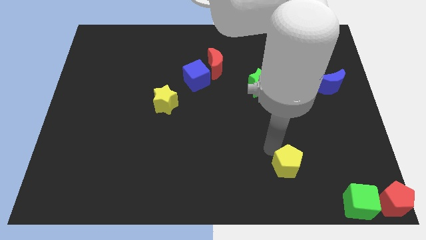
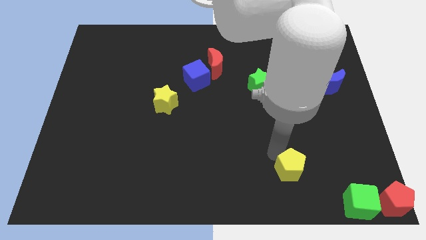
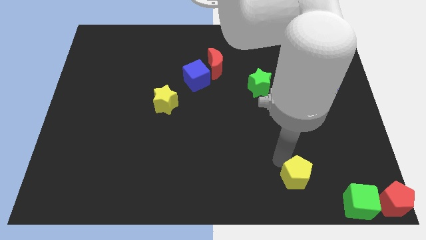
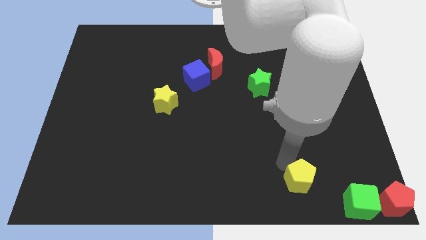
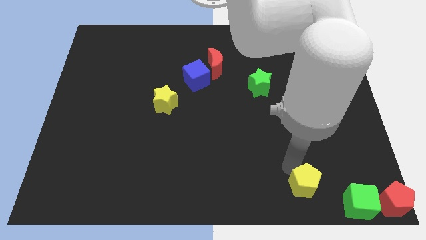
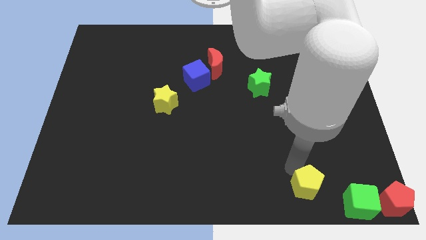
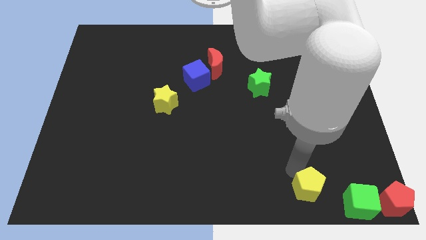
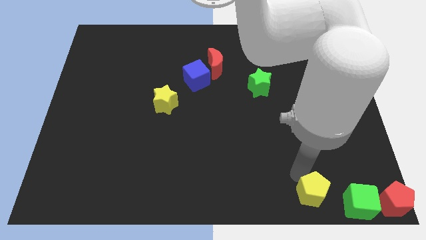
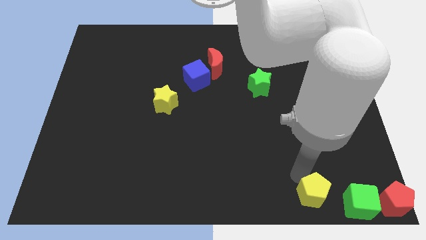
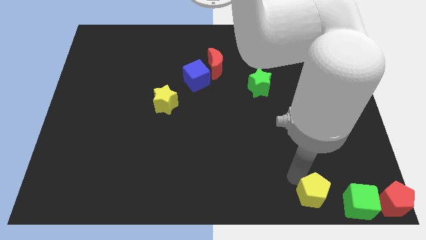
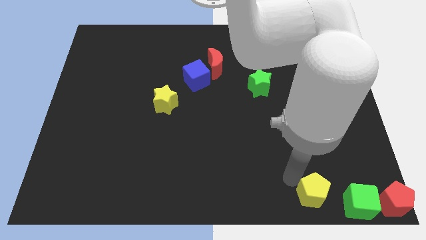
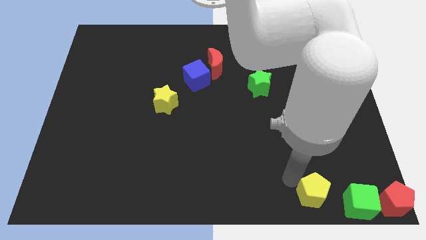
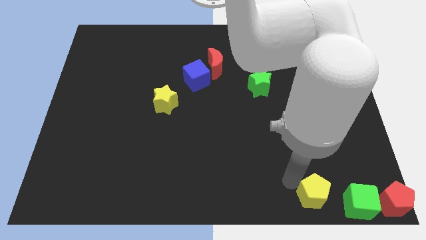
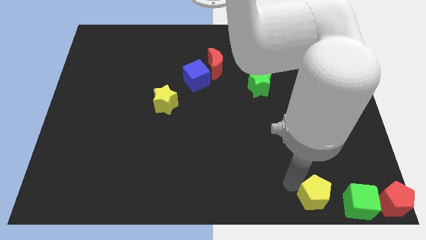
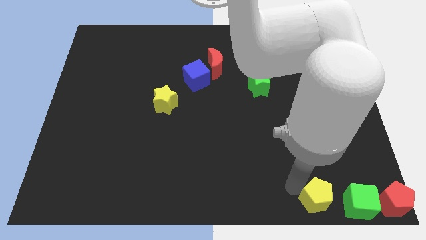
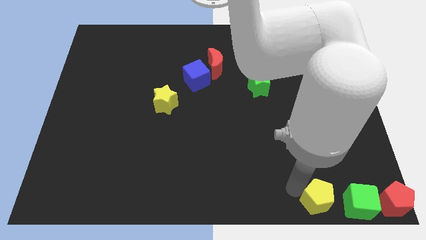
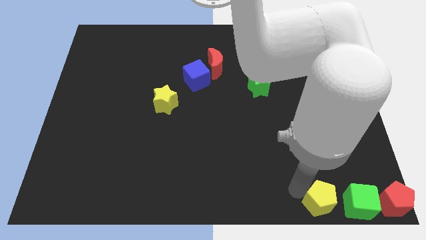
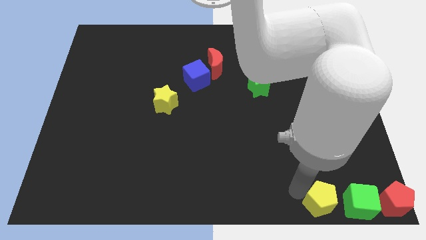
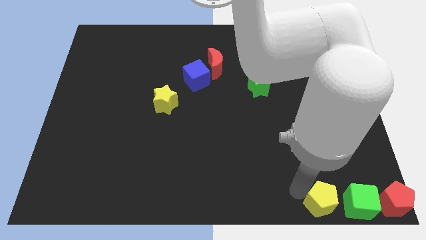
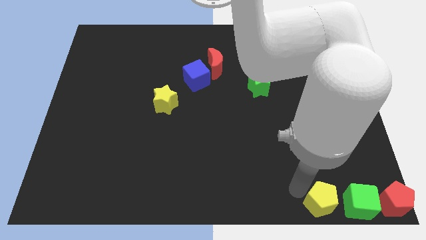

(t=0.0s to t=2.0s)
move the yellow pentagon to the left of the green cube

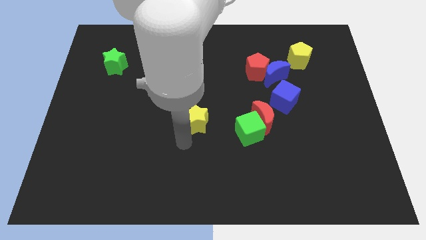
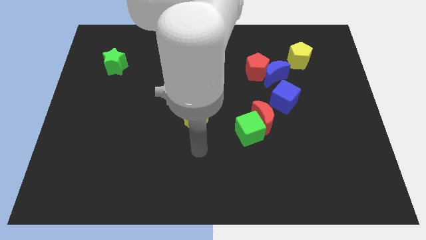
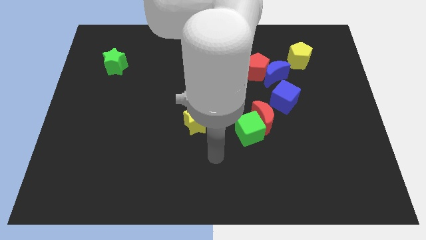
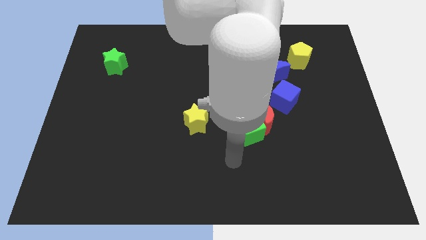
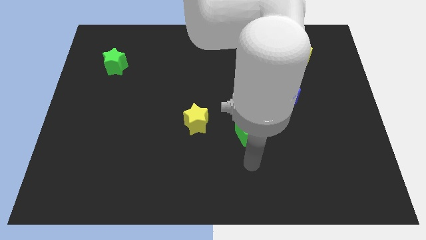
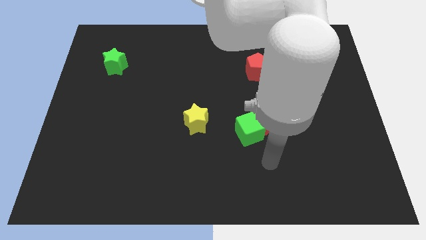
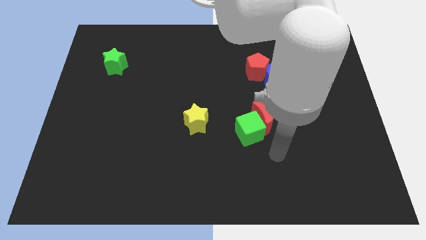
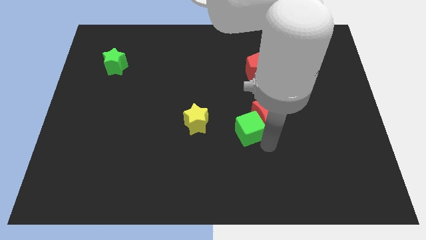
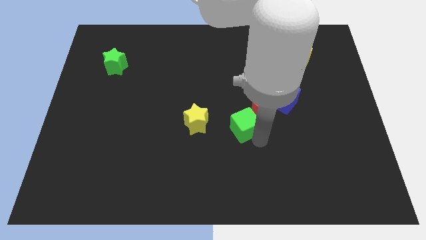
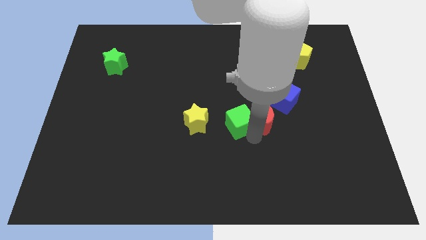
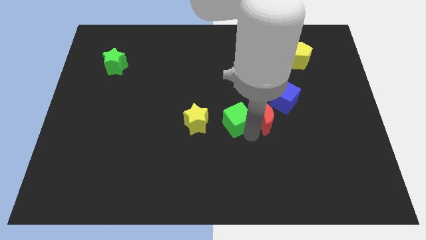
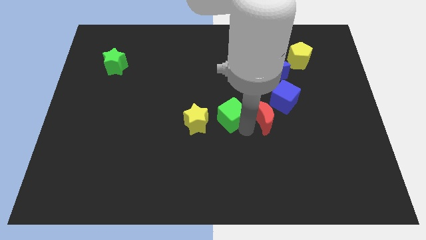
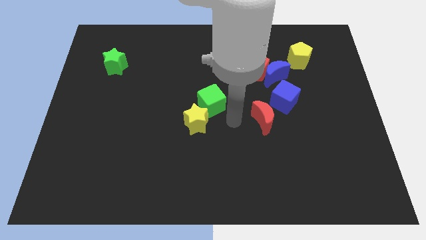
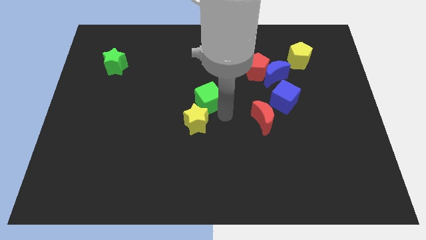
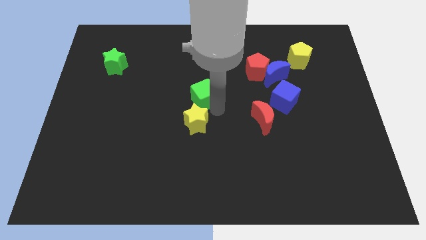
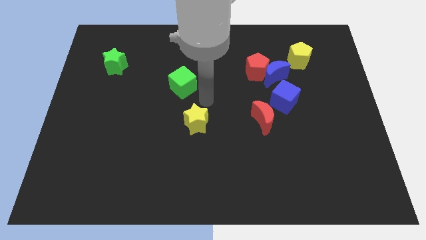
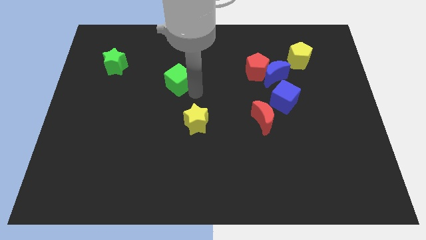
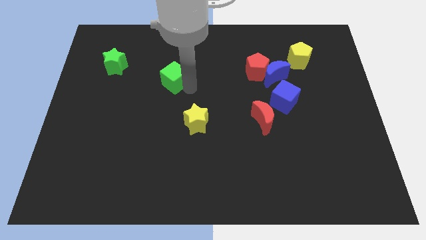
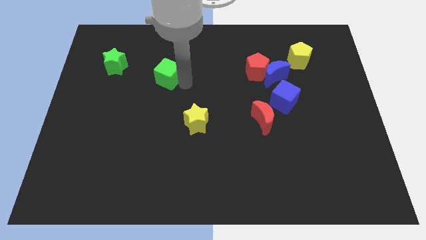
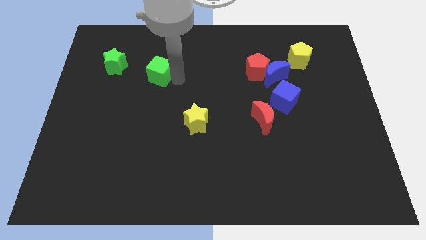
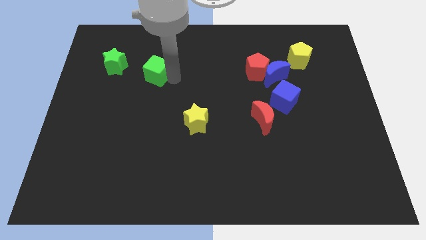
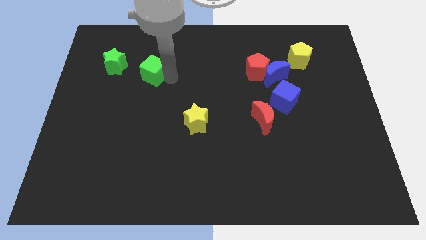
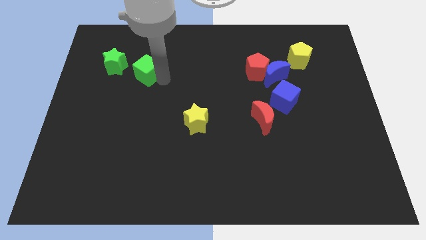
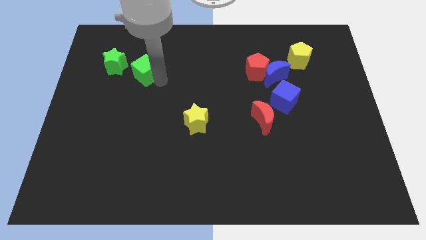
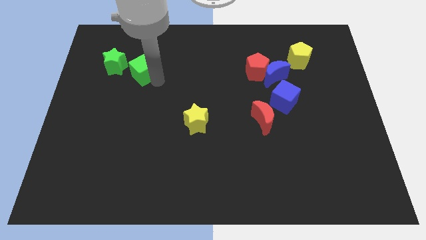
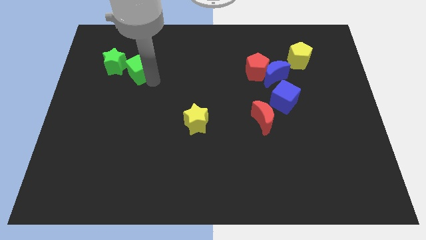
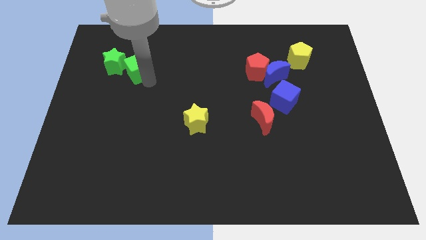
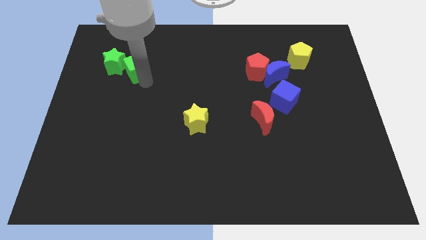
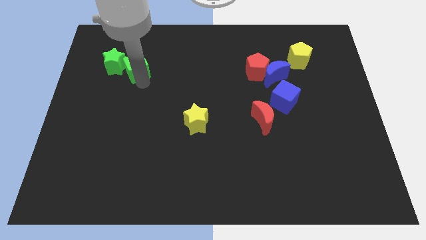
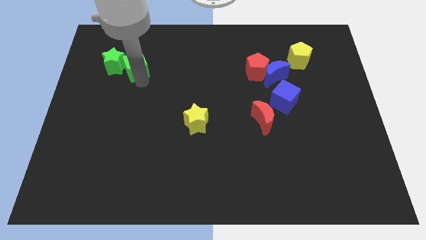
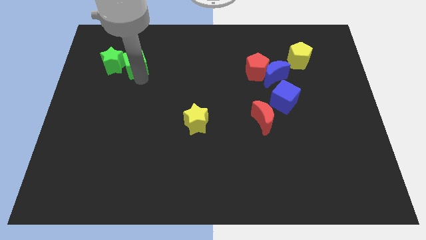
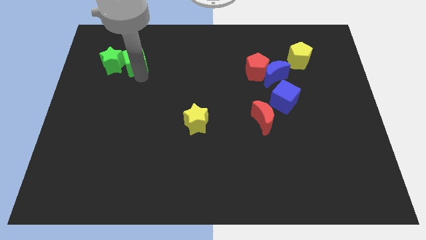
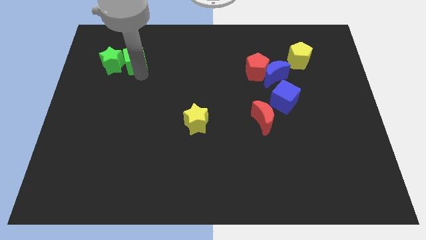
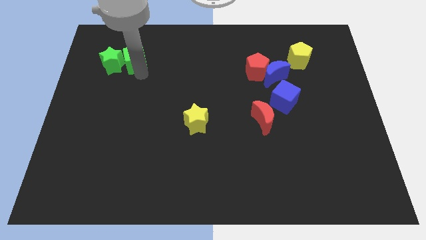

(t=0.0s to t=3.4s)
move the green cube to the right into green star

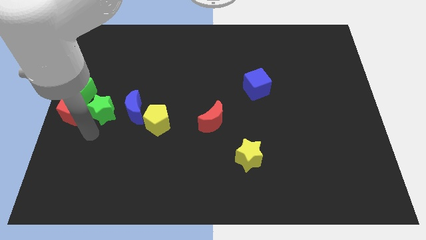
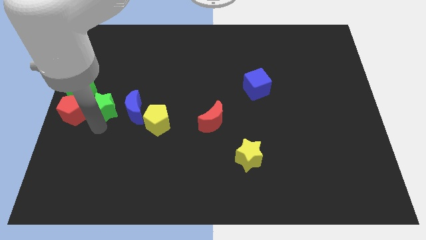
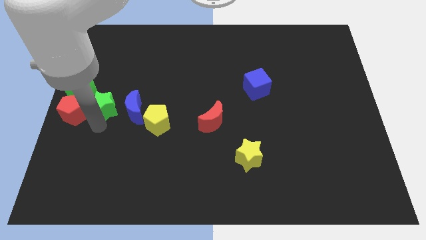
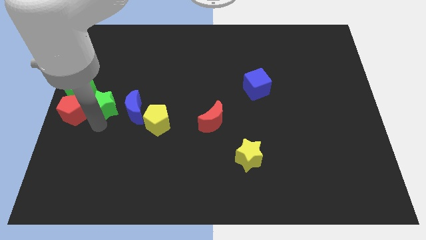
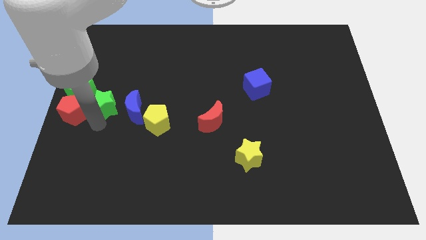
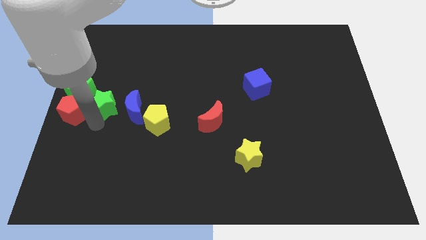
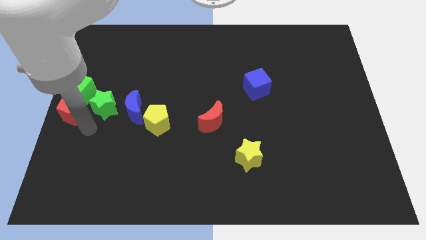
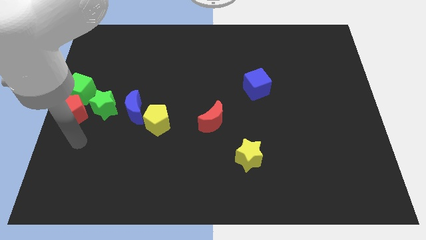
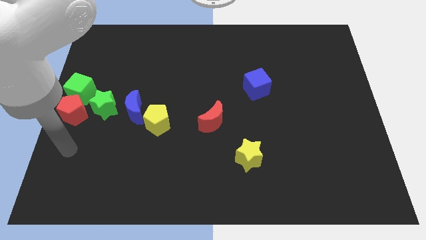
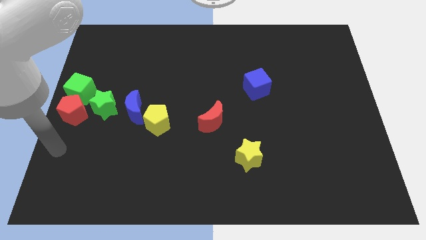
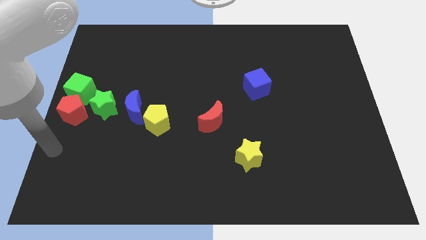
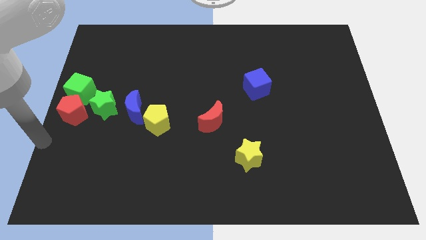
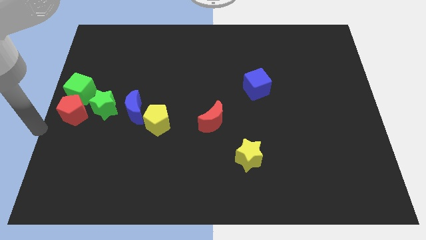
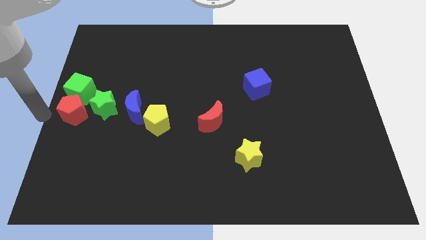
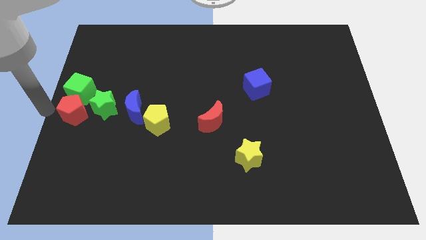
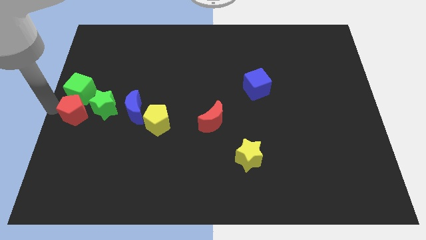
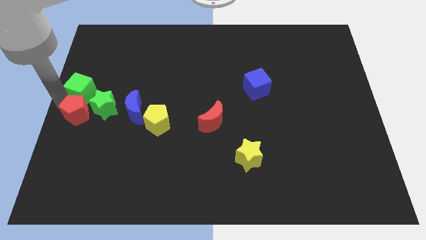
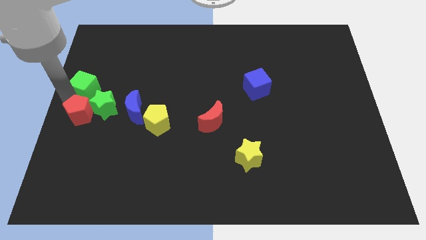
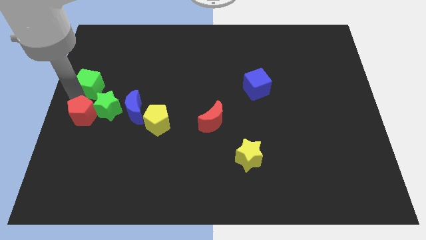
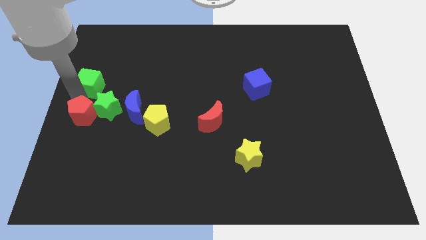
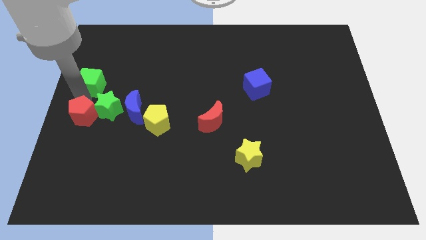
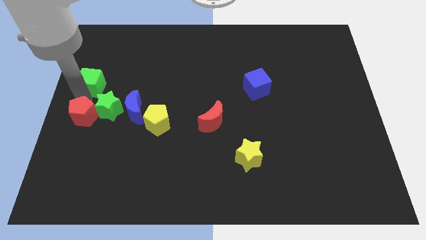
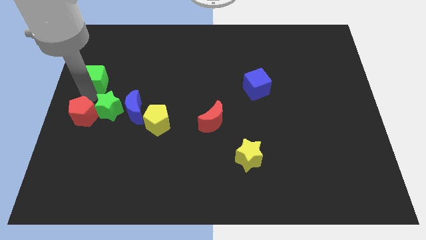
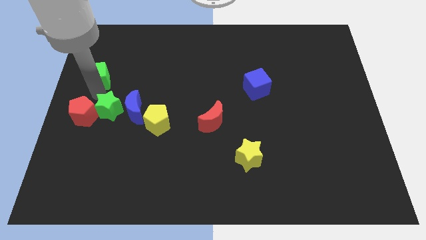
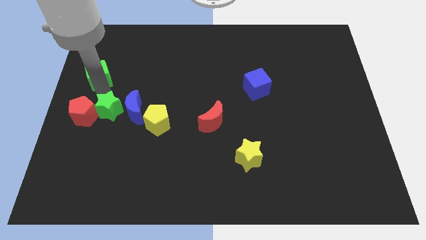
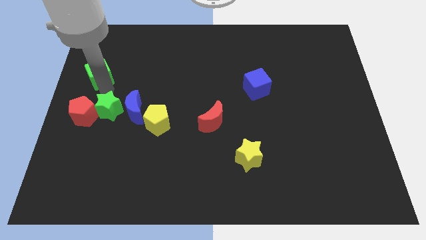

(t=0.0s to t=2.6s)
move the red pentagon close to the green star

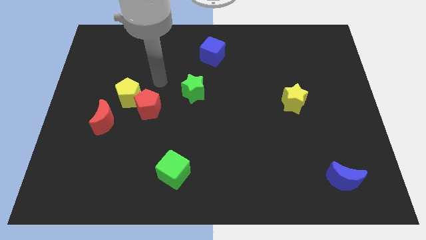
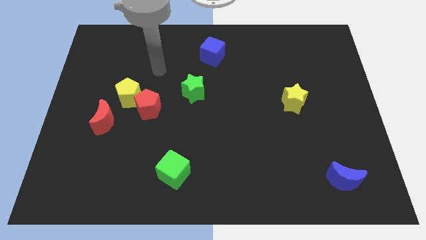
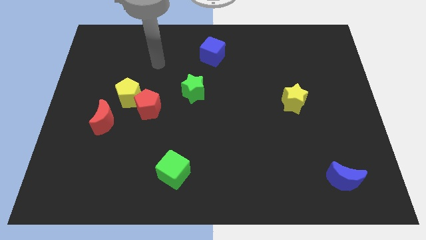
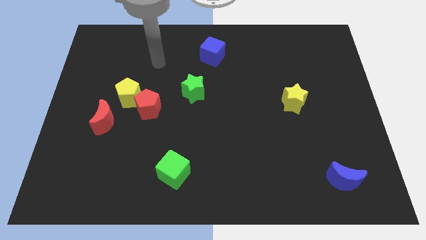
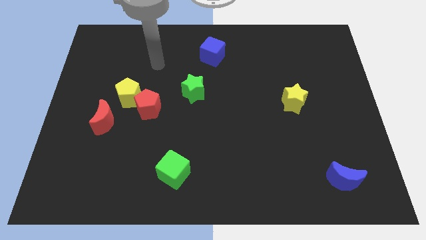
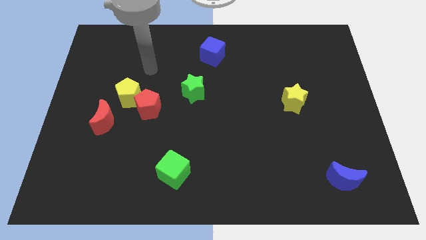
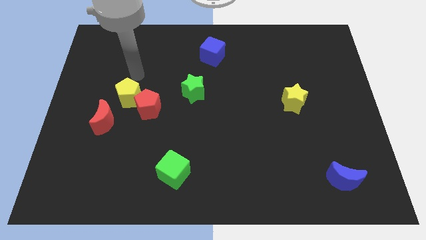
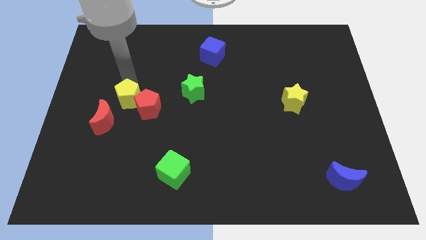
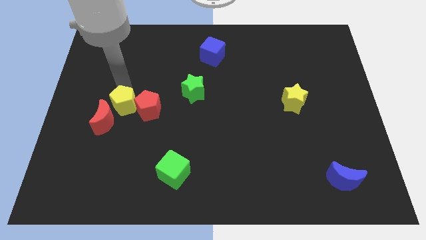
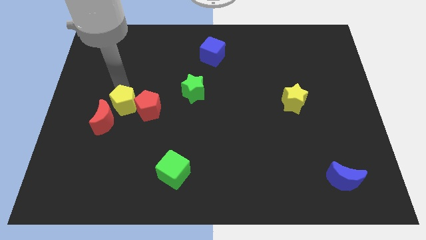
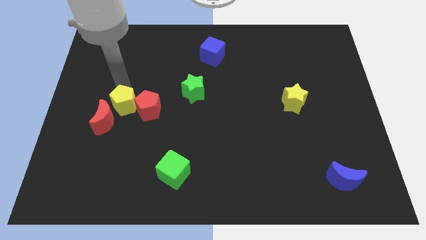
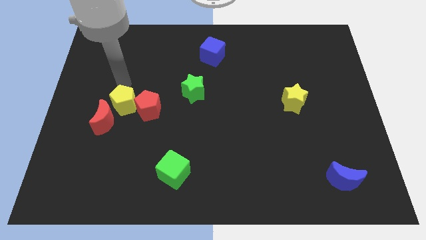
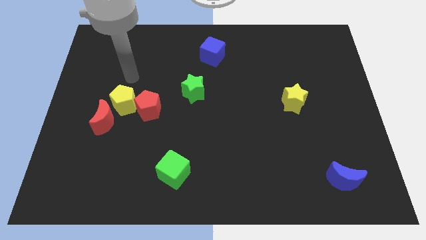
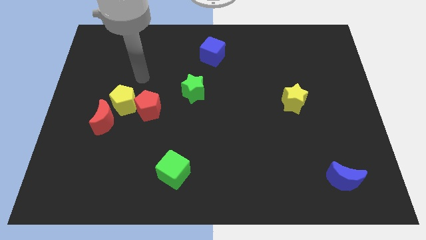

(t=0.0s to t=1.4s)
push the yellow pentagon slightly towards the red pentagon
